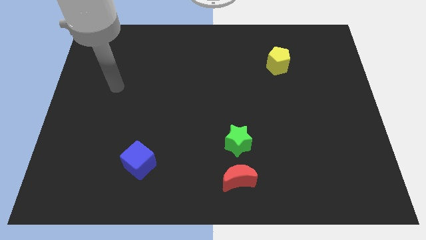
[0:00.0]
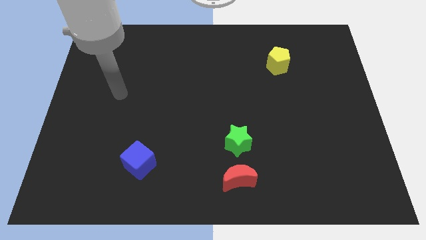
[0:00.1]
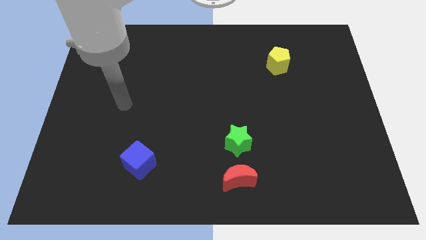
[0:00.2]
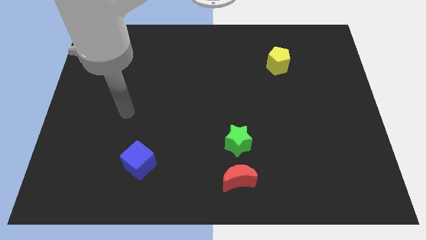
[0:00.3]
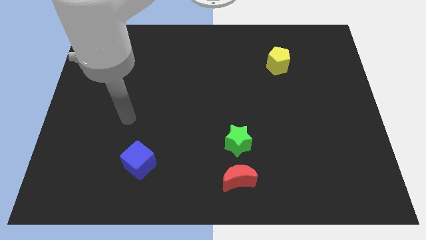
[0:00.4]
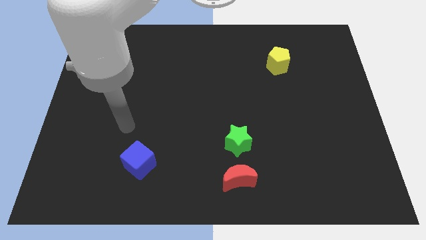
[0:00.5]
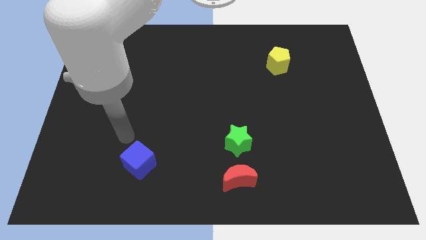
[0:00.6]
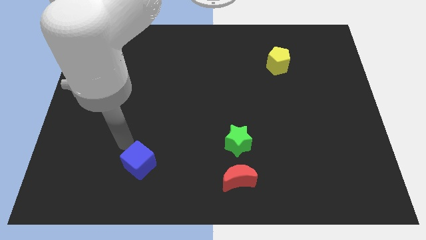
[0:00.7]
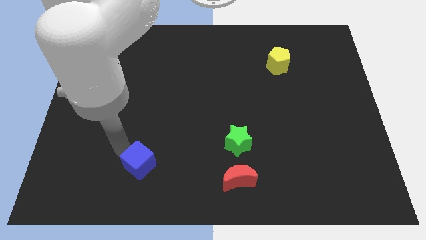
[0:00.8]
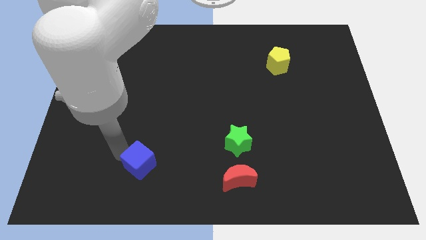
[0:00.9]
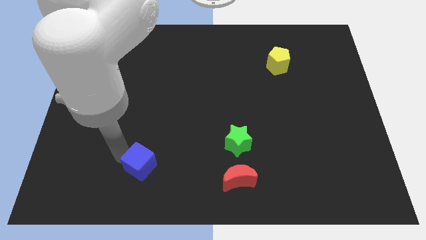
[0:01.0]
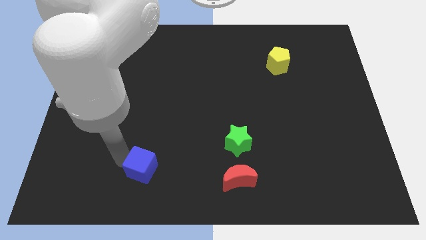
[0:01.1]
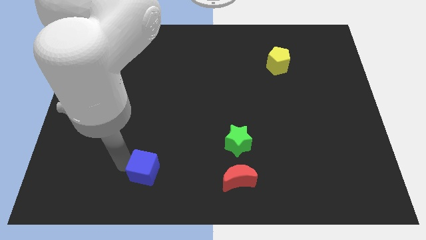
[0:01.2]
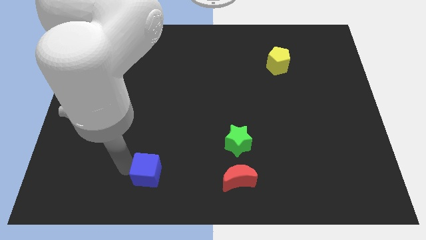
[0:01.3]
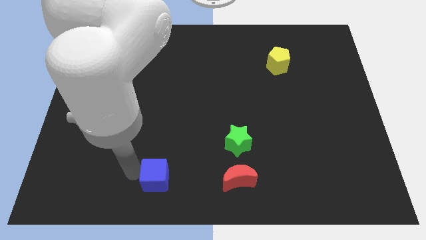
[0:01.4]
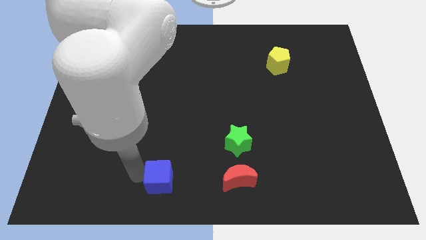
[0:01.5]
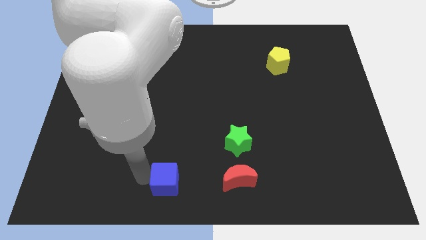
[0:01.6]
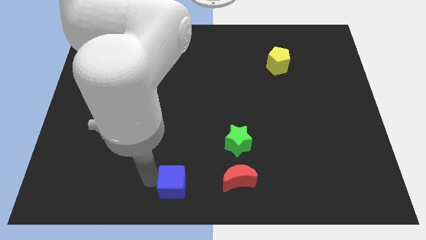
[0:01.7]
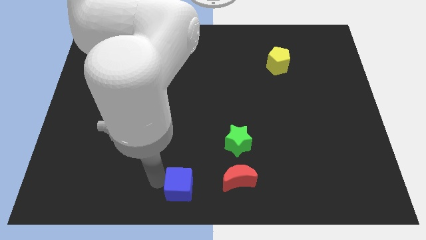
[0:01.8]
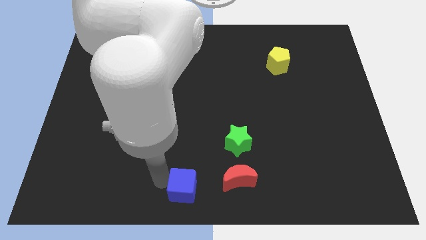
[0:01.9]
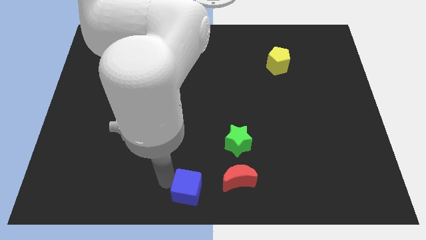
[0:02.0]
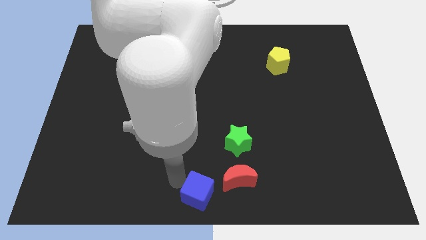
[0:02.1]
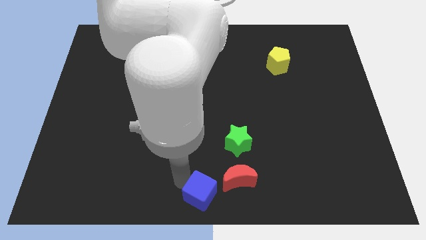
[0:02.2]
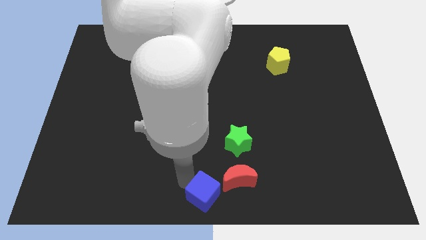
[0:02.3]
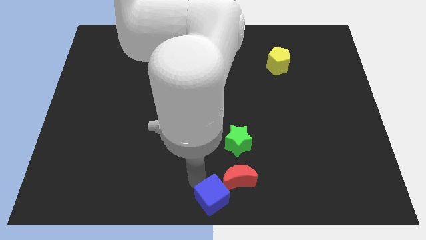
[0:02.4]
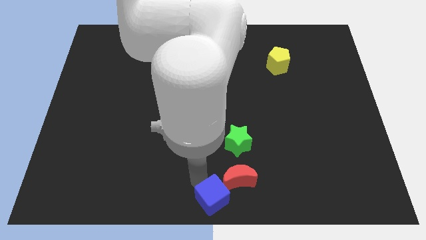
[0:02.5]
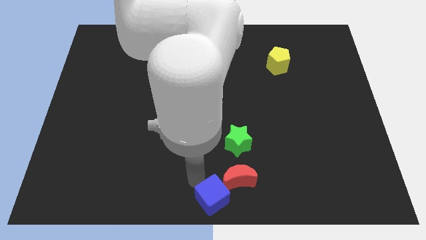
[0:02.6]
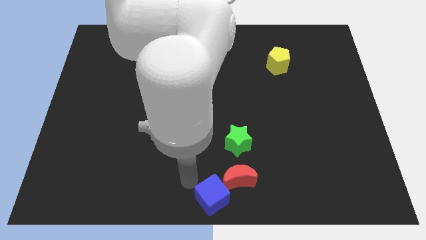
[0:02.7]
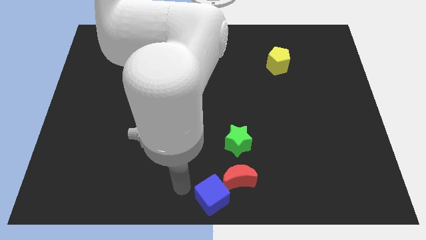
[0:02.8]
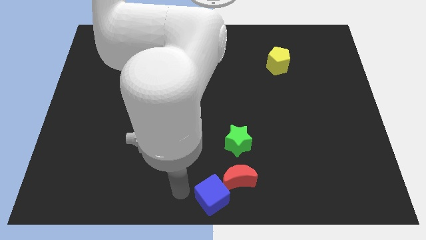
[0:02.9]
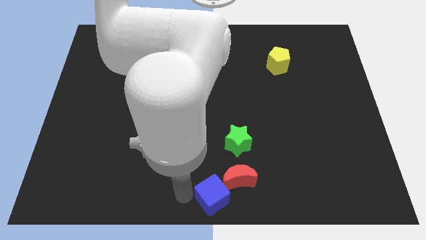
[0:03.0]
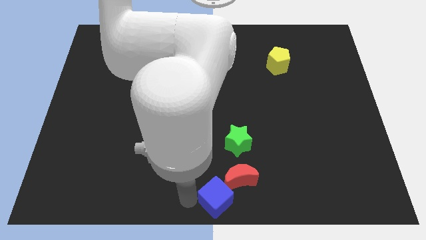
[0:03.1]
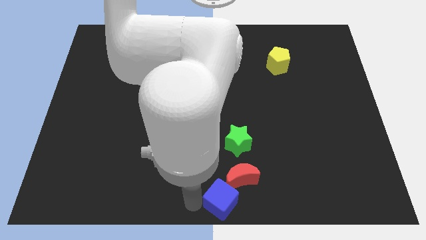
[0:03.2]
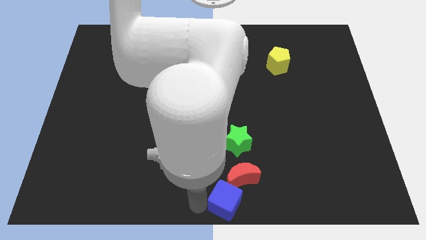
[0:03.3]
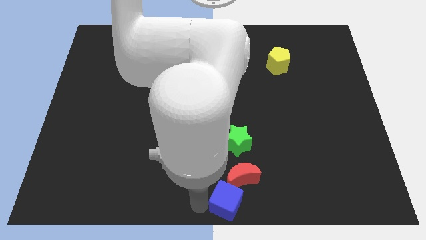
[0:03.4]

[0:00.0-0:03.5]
move the blue cube close to the moon

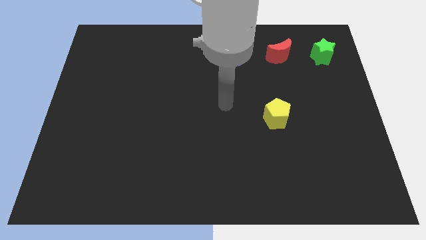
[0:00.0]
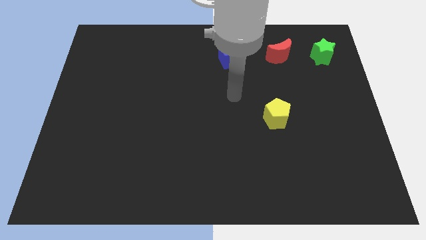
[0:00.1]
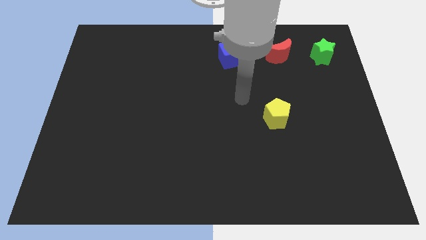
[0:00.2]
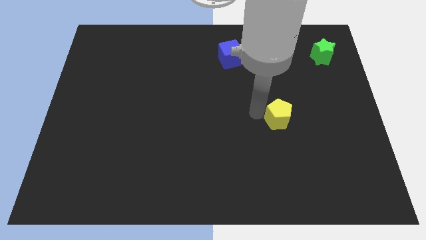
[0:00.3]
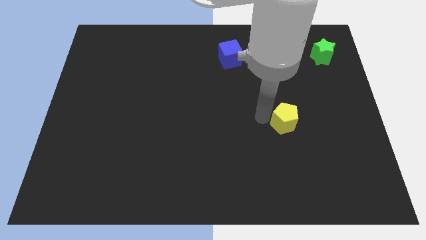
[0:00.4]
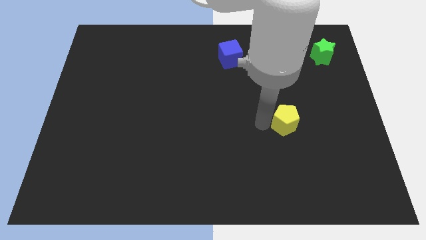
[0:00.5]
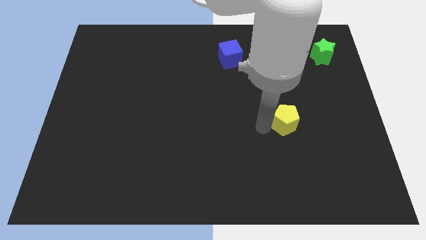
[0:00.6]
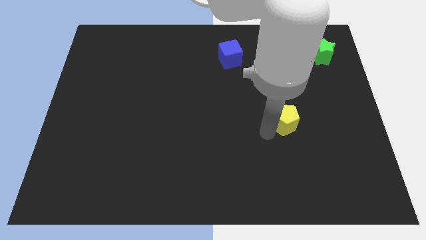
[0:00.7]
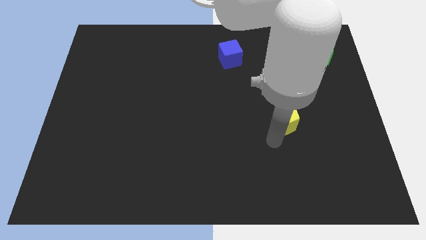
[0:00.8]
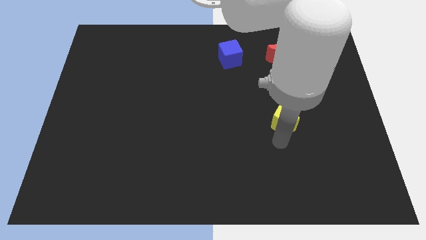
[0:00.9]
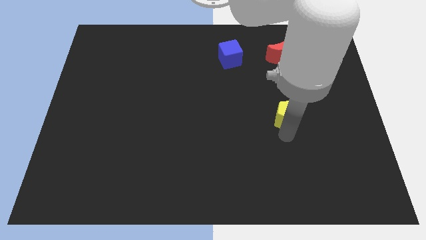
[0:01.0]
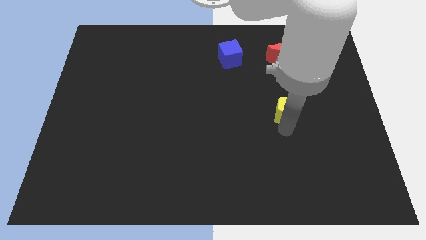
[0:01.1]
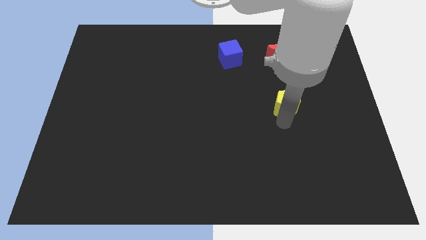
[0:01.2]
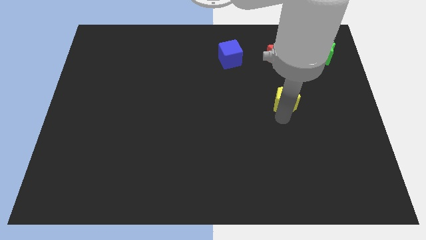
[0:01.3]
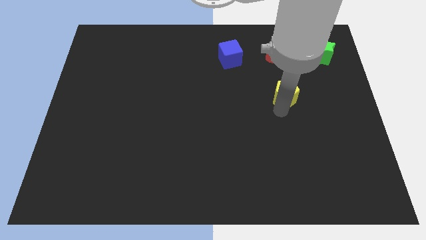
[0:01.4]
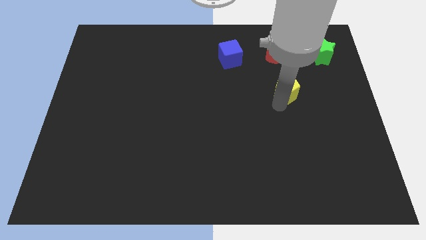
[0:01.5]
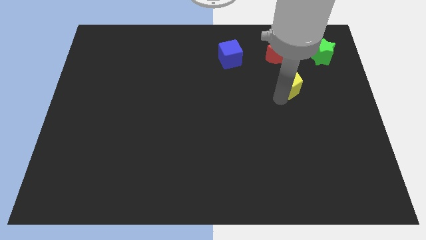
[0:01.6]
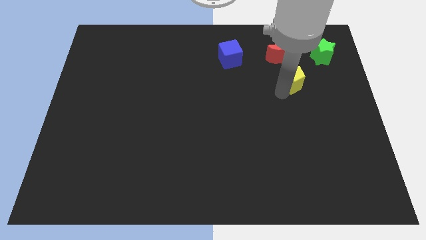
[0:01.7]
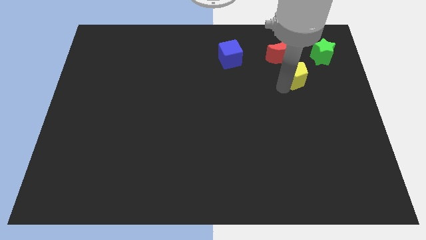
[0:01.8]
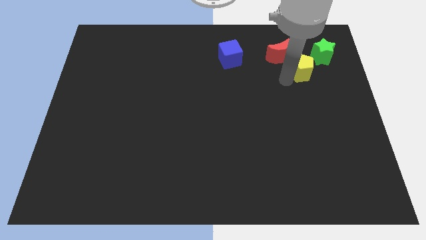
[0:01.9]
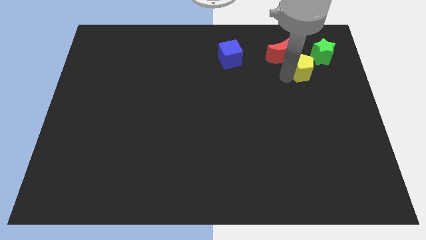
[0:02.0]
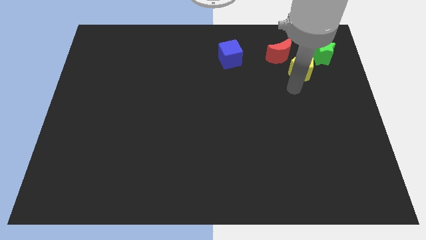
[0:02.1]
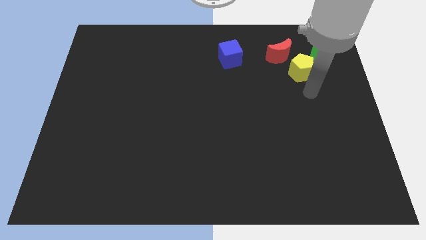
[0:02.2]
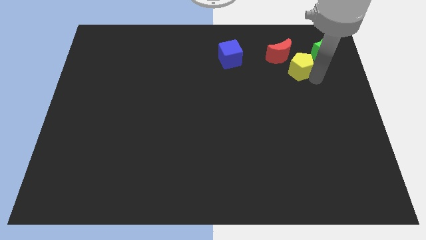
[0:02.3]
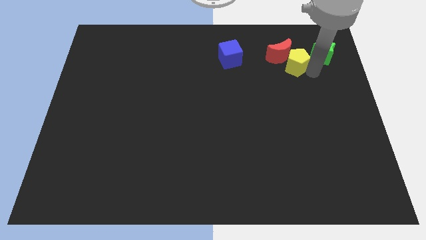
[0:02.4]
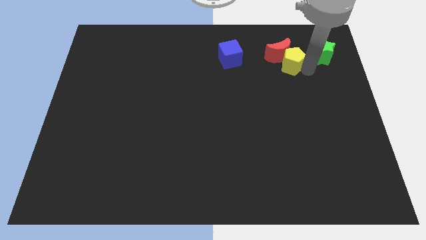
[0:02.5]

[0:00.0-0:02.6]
move the pentagon towards the red block

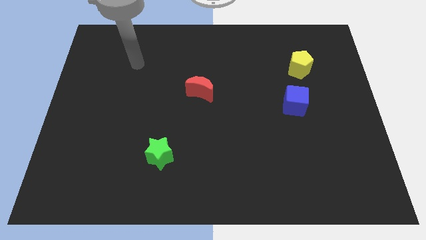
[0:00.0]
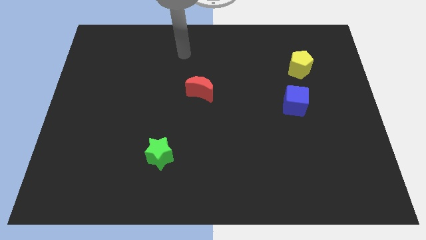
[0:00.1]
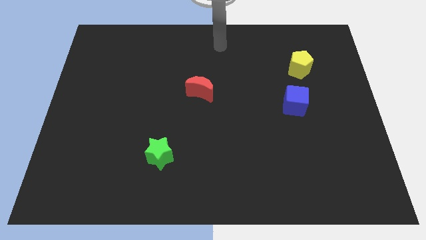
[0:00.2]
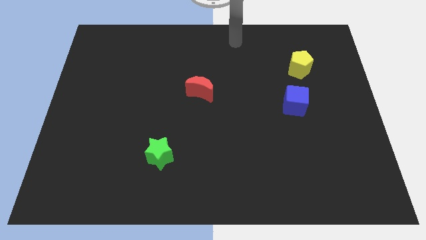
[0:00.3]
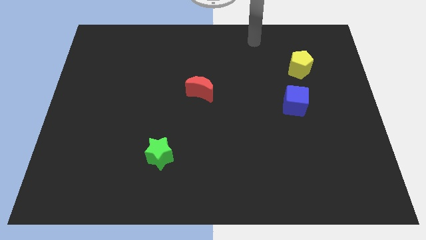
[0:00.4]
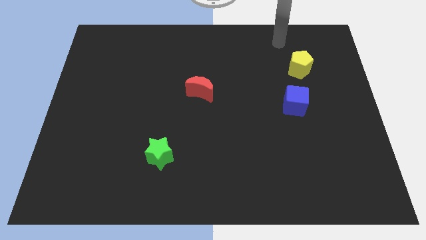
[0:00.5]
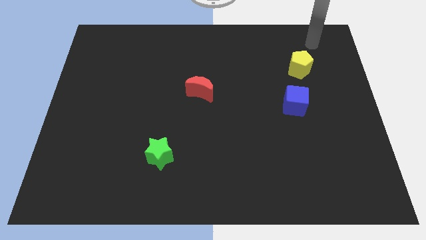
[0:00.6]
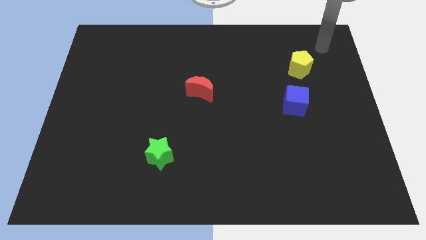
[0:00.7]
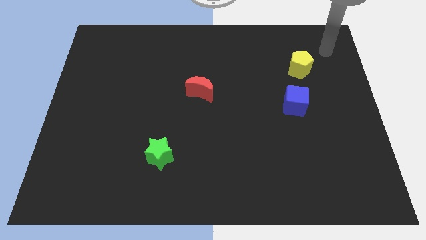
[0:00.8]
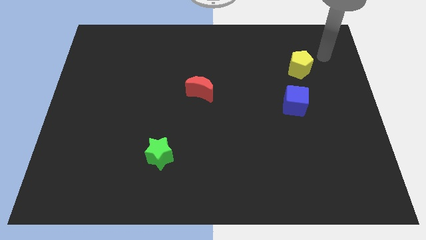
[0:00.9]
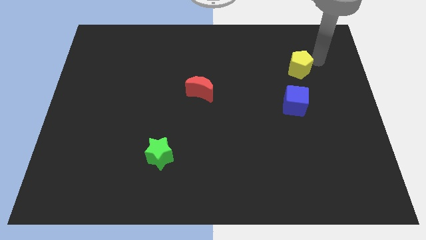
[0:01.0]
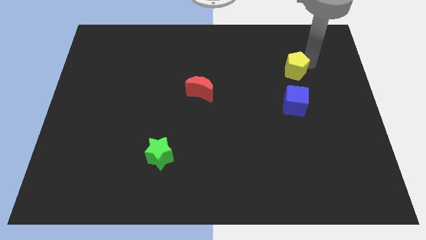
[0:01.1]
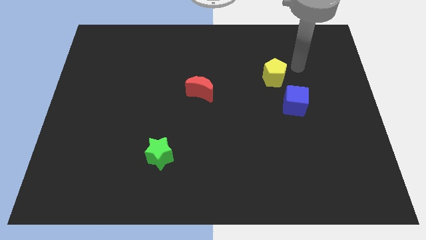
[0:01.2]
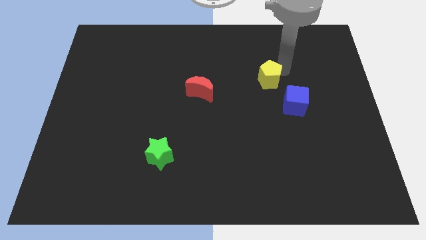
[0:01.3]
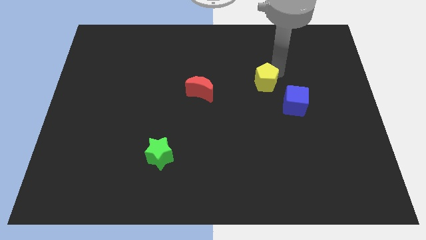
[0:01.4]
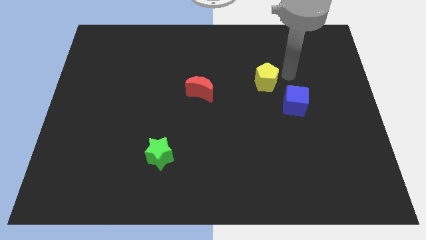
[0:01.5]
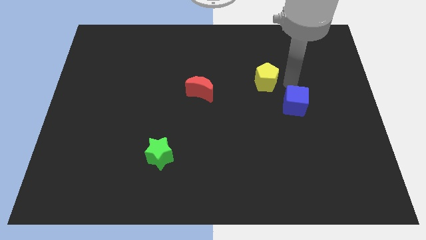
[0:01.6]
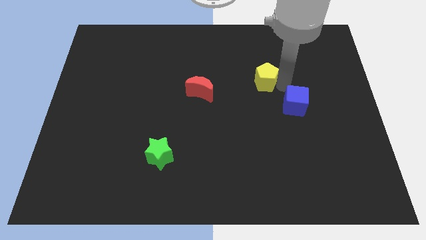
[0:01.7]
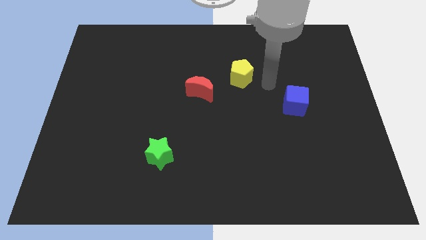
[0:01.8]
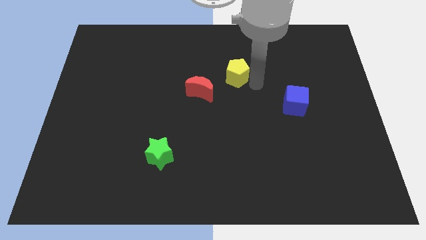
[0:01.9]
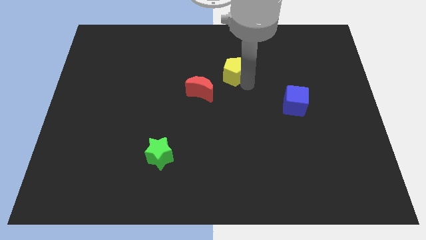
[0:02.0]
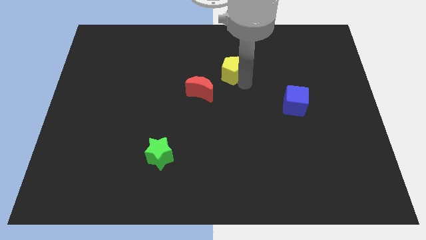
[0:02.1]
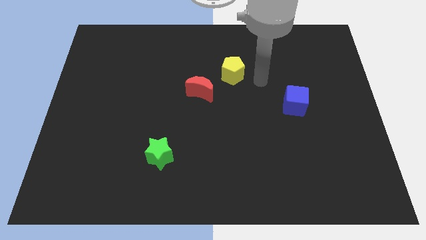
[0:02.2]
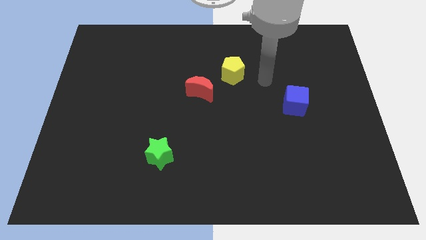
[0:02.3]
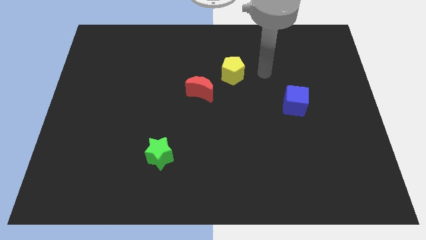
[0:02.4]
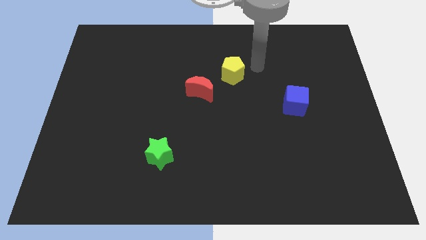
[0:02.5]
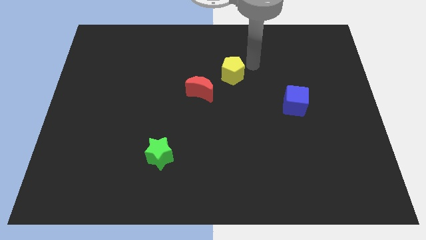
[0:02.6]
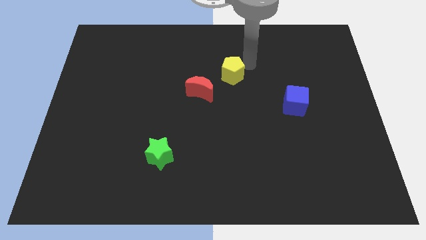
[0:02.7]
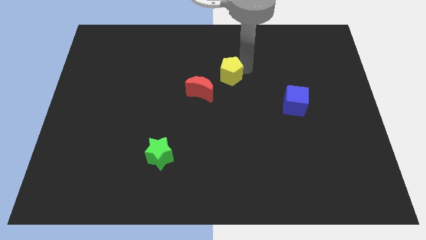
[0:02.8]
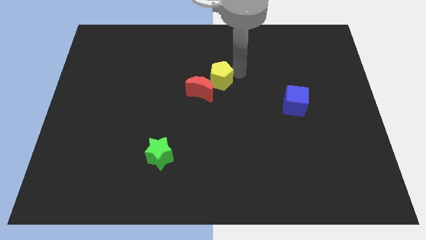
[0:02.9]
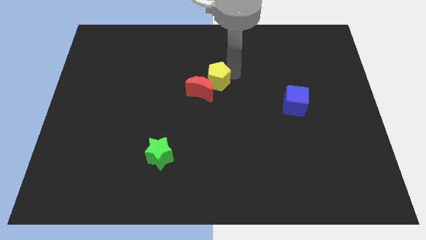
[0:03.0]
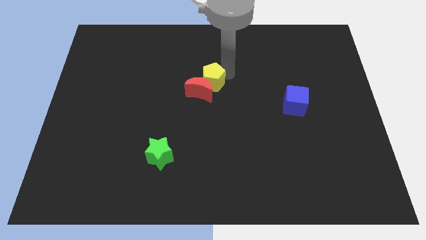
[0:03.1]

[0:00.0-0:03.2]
move the yellow pentagon next to the moon
